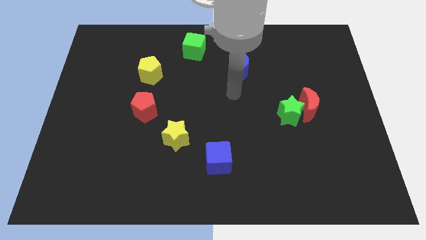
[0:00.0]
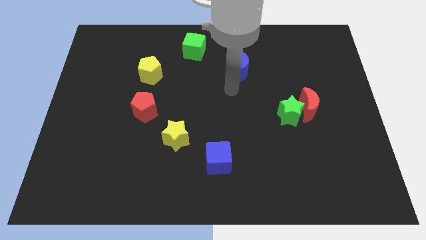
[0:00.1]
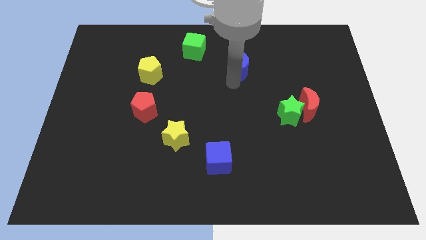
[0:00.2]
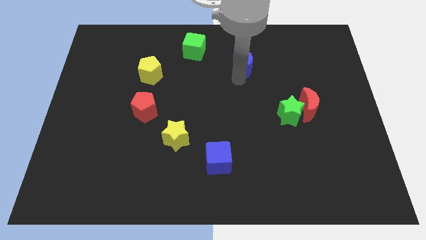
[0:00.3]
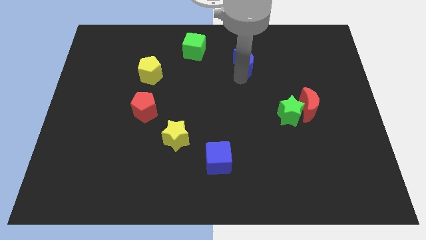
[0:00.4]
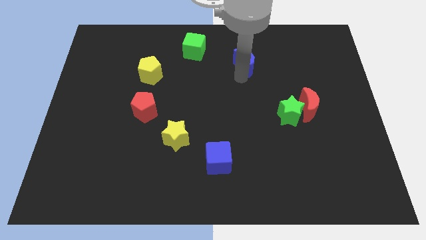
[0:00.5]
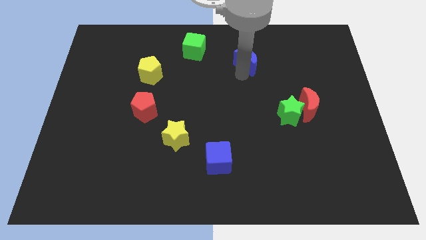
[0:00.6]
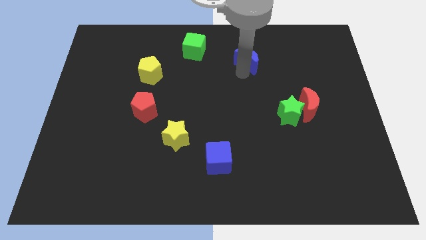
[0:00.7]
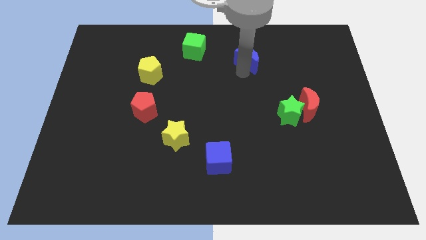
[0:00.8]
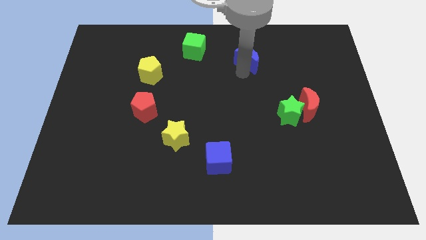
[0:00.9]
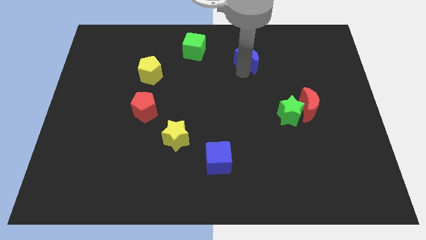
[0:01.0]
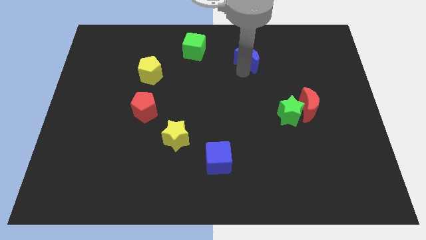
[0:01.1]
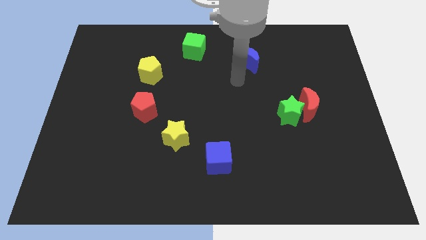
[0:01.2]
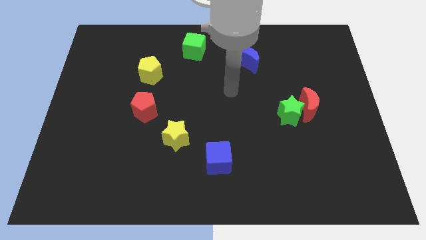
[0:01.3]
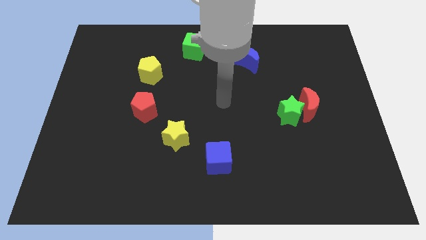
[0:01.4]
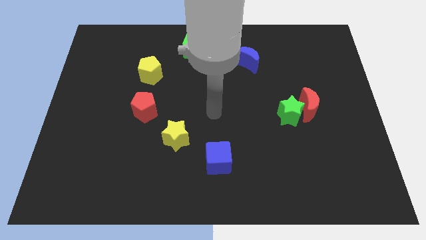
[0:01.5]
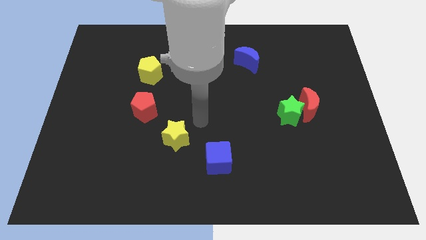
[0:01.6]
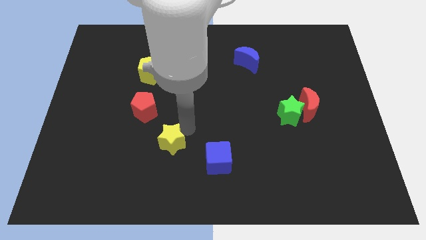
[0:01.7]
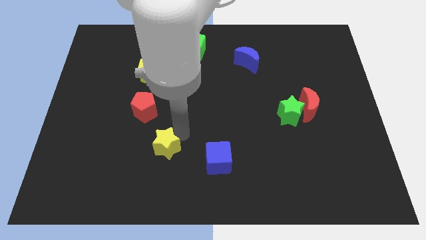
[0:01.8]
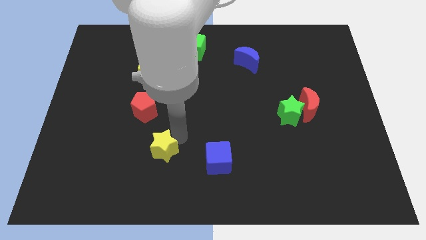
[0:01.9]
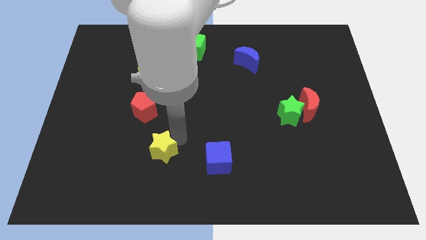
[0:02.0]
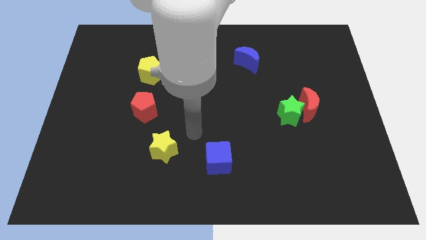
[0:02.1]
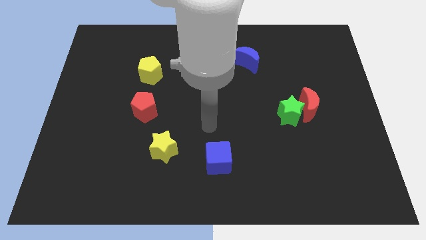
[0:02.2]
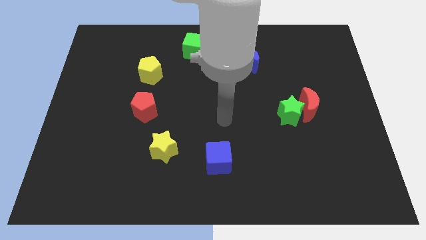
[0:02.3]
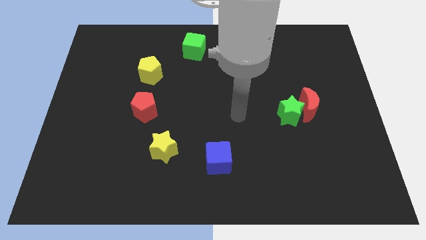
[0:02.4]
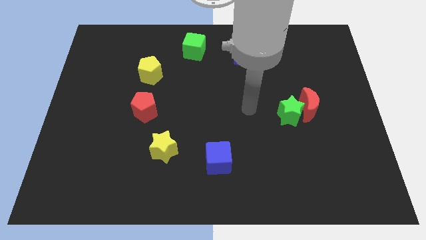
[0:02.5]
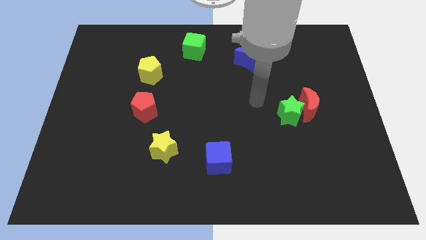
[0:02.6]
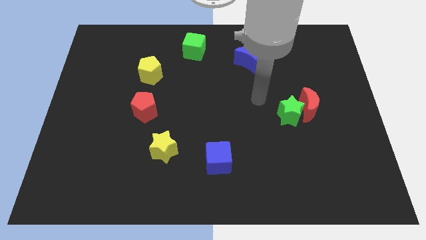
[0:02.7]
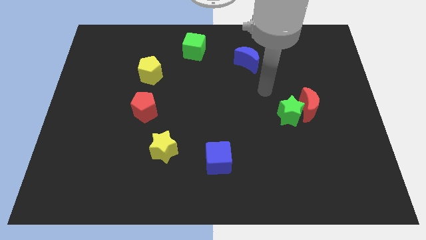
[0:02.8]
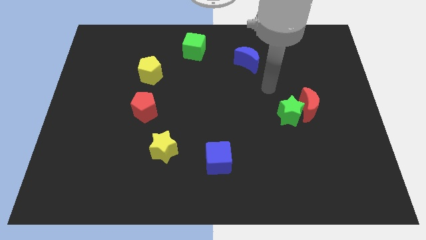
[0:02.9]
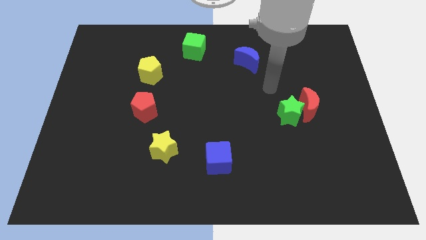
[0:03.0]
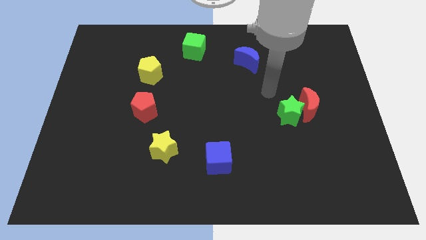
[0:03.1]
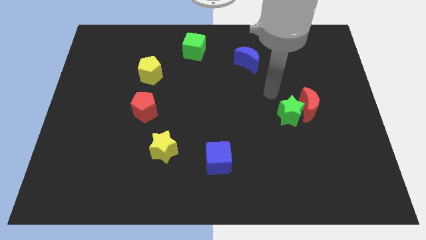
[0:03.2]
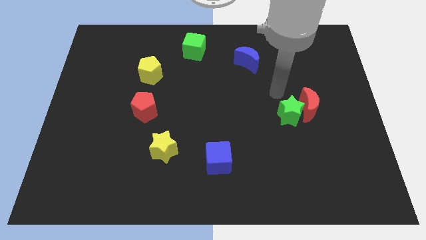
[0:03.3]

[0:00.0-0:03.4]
slightly move the yellow star towards the bottom left corner

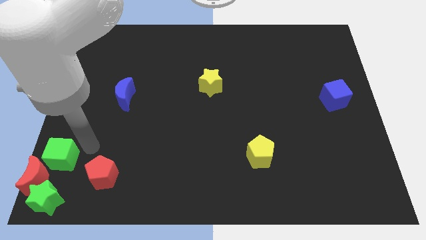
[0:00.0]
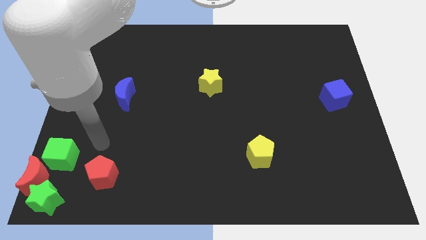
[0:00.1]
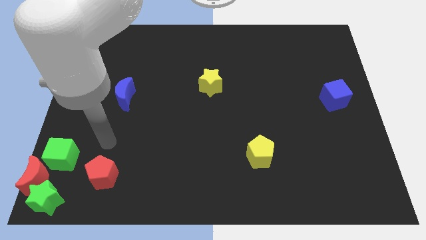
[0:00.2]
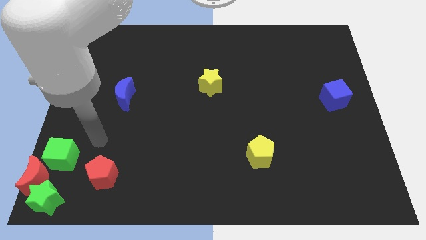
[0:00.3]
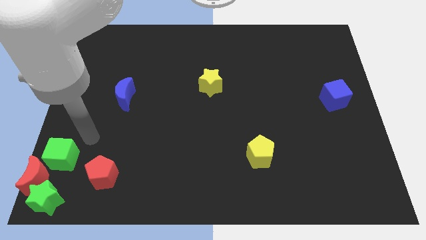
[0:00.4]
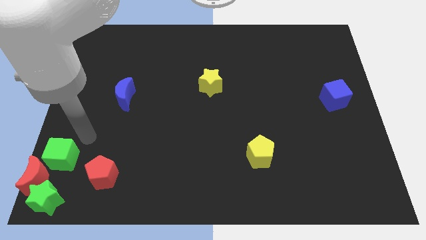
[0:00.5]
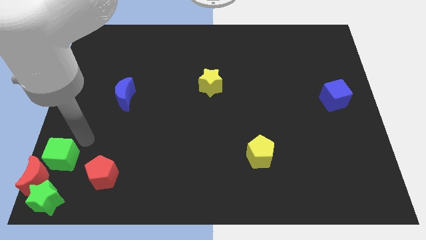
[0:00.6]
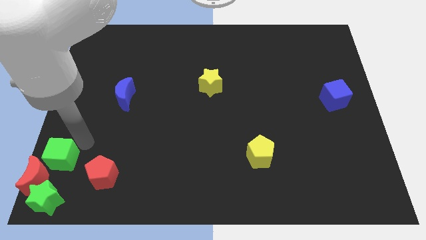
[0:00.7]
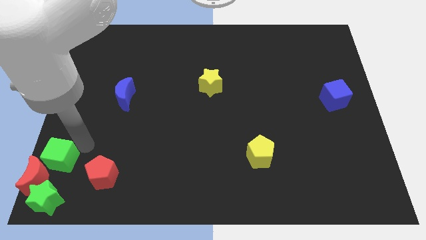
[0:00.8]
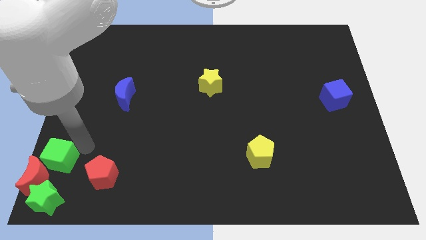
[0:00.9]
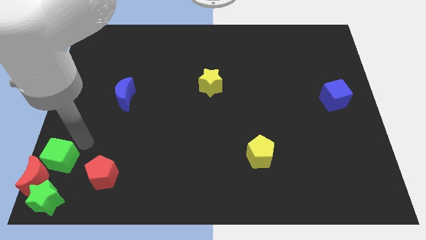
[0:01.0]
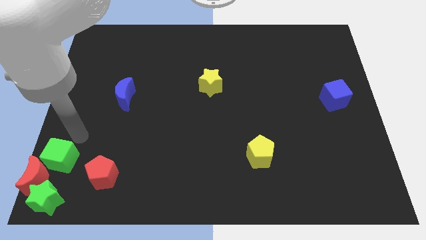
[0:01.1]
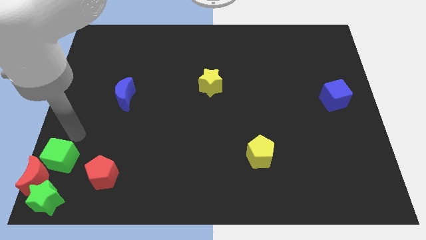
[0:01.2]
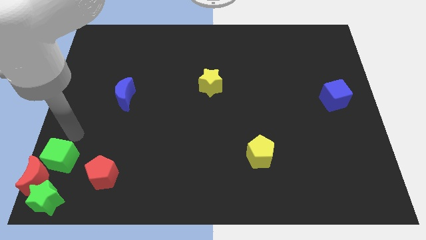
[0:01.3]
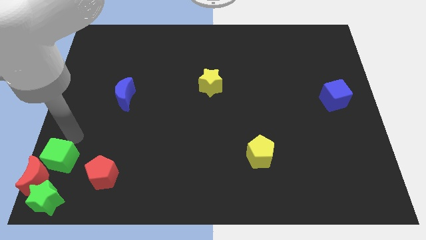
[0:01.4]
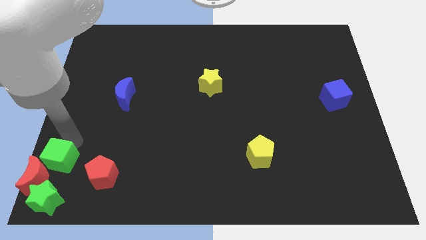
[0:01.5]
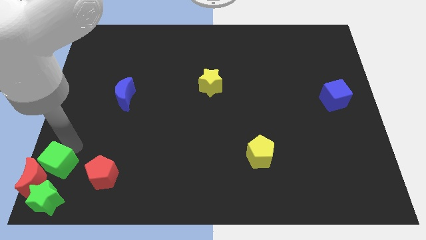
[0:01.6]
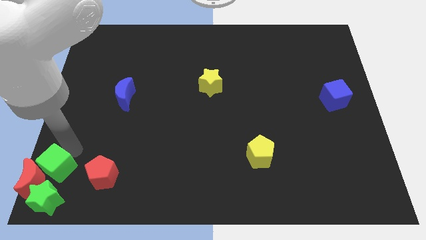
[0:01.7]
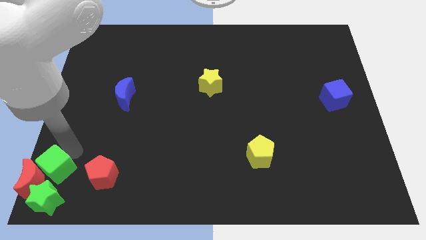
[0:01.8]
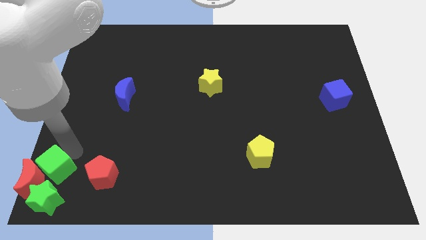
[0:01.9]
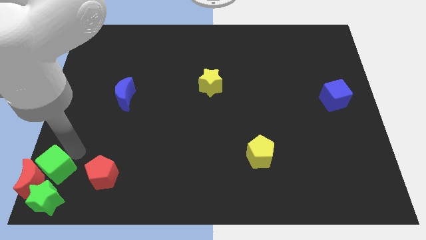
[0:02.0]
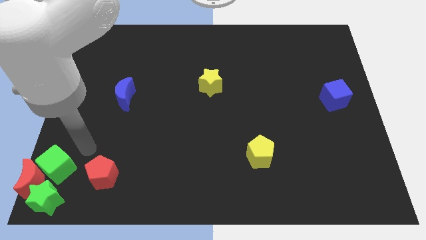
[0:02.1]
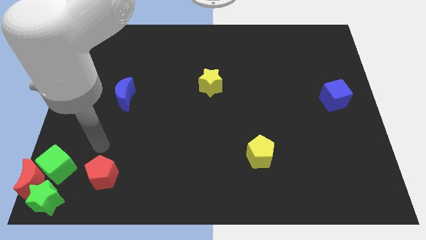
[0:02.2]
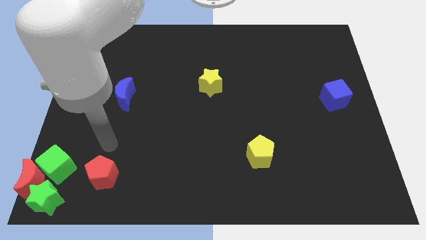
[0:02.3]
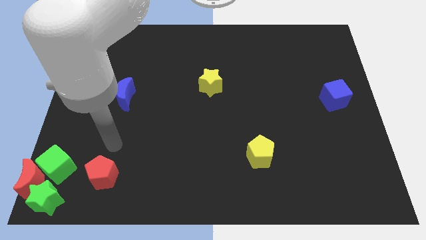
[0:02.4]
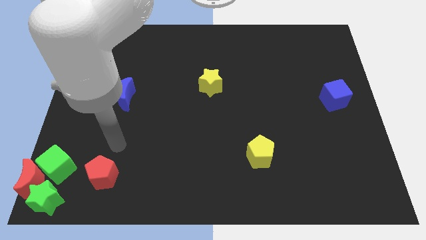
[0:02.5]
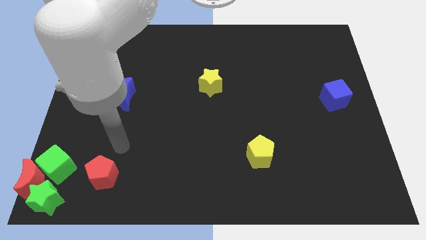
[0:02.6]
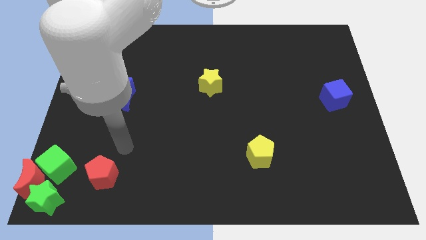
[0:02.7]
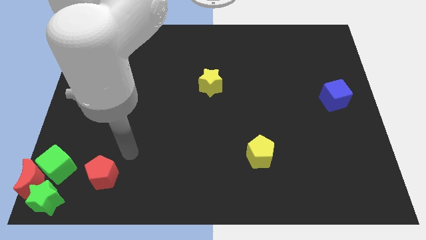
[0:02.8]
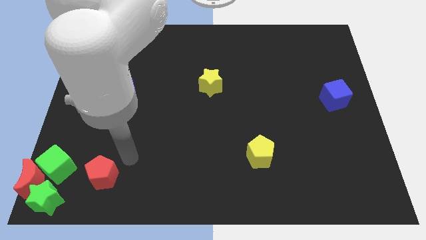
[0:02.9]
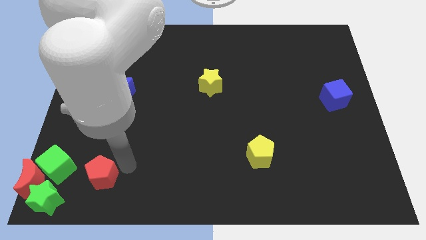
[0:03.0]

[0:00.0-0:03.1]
push the green cube to the bottom left

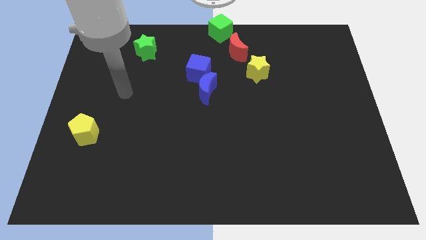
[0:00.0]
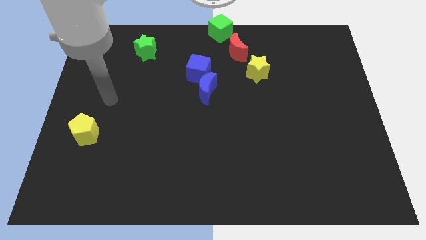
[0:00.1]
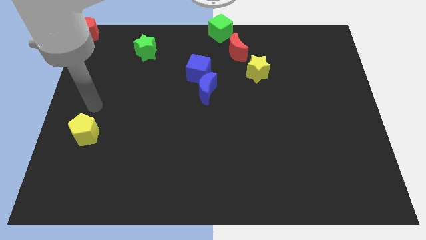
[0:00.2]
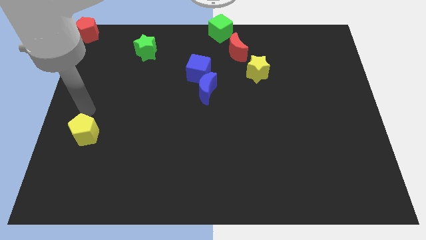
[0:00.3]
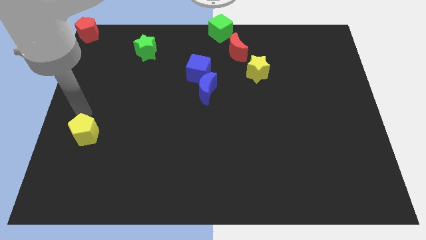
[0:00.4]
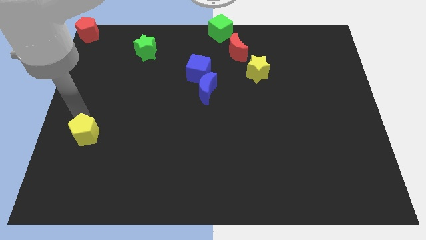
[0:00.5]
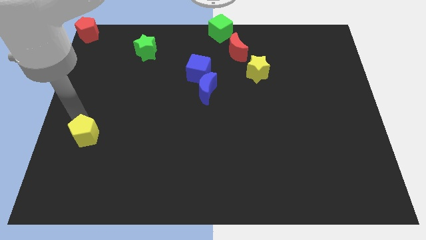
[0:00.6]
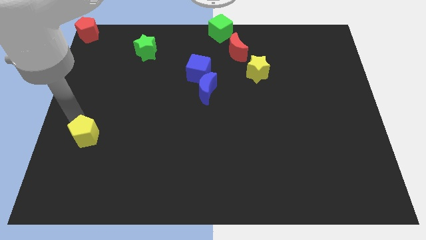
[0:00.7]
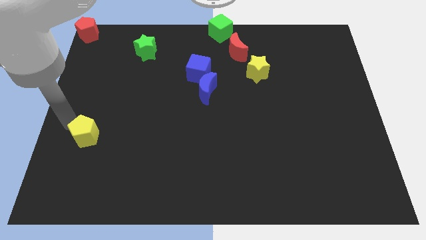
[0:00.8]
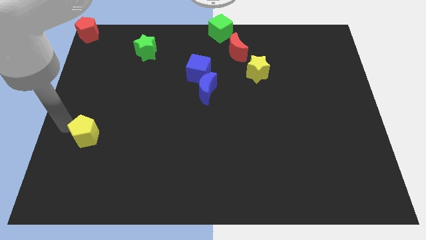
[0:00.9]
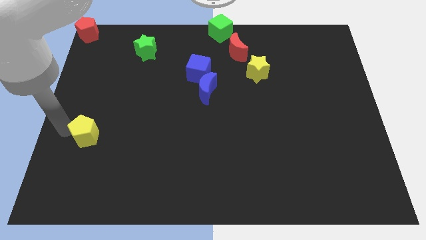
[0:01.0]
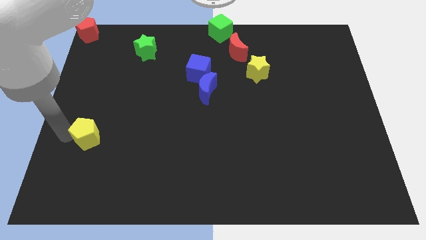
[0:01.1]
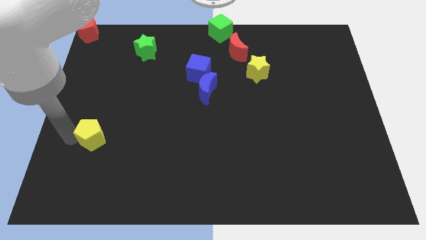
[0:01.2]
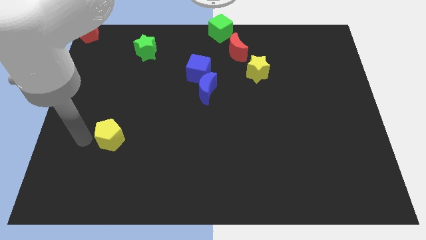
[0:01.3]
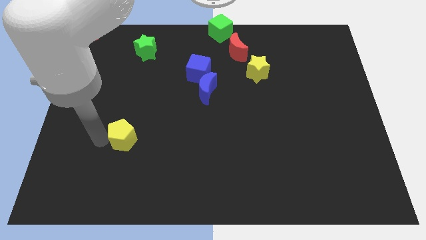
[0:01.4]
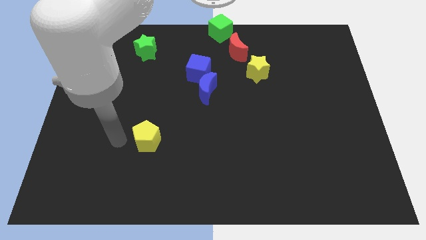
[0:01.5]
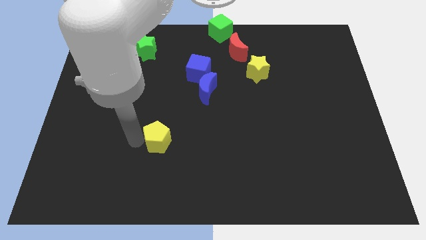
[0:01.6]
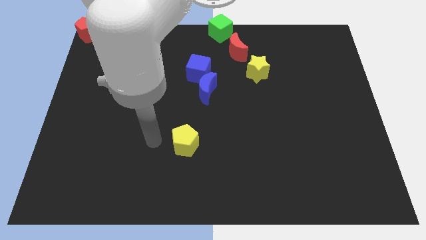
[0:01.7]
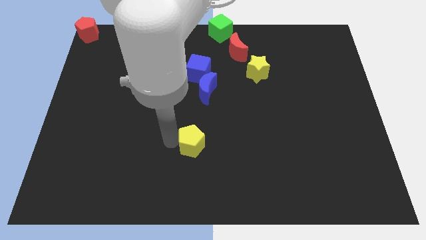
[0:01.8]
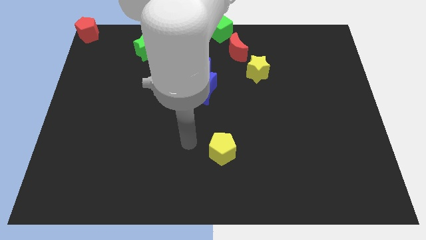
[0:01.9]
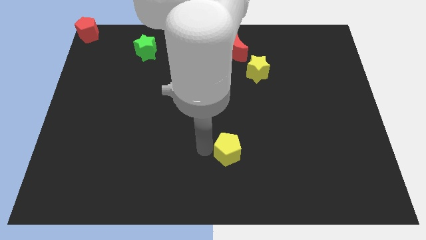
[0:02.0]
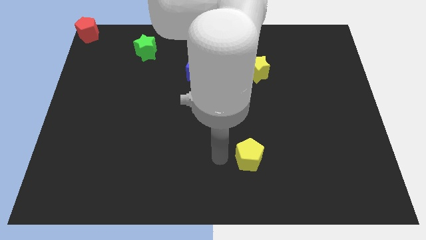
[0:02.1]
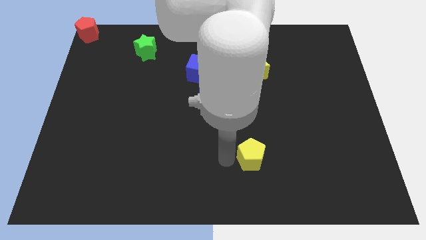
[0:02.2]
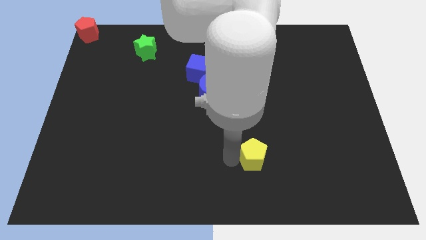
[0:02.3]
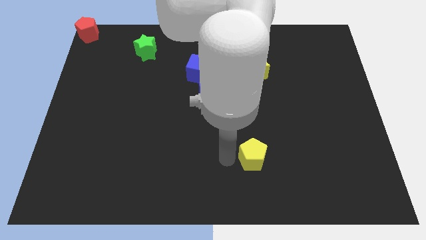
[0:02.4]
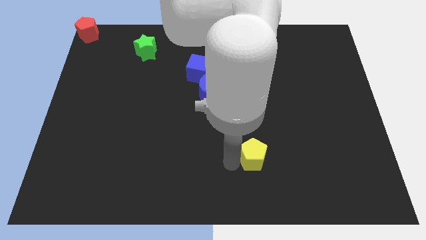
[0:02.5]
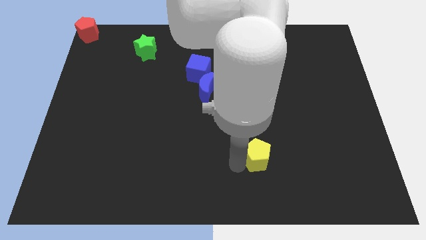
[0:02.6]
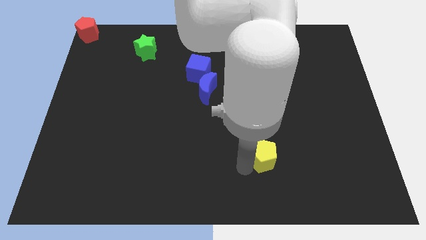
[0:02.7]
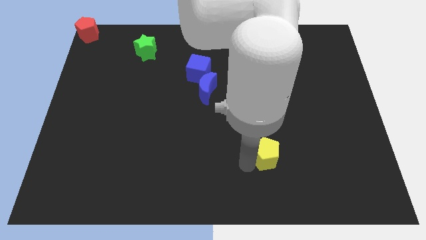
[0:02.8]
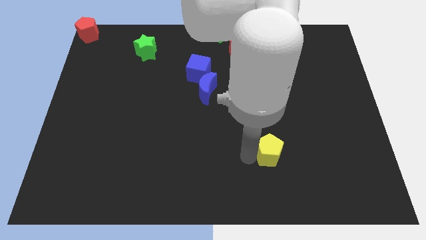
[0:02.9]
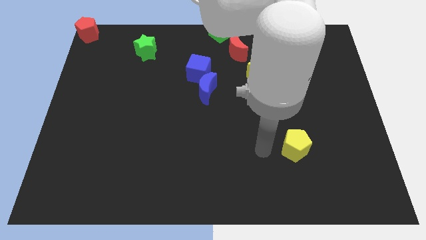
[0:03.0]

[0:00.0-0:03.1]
push yellow pentagon to the bottom right of yellow star
